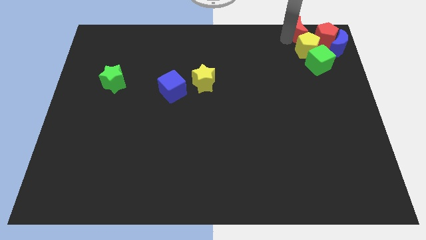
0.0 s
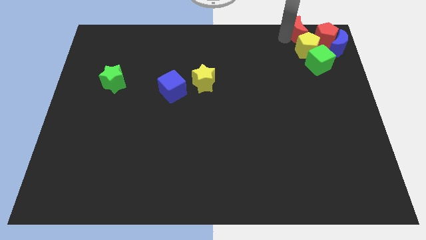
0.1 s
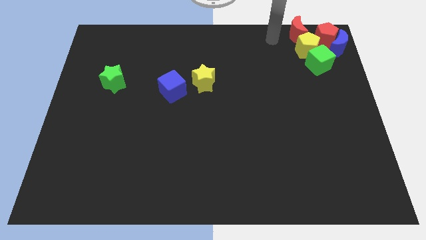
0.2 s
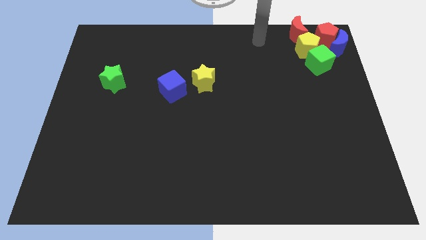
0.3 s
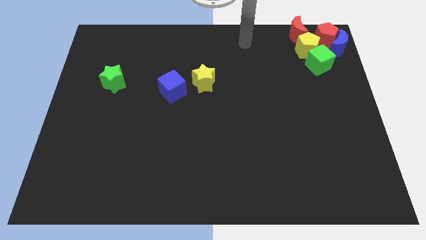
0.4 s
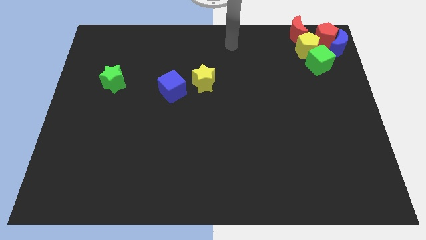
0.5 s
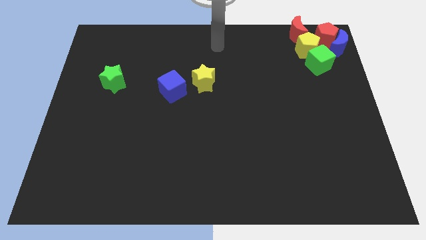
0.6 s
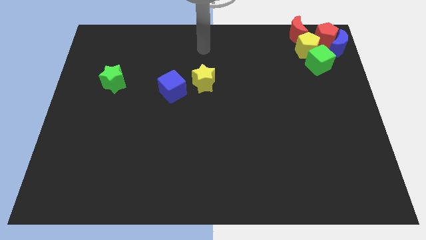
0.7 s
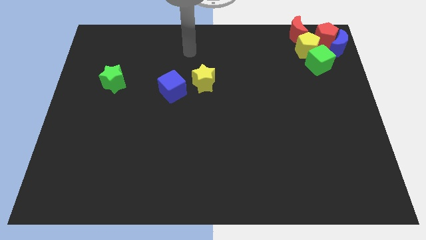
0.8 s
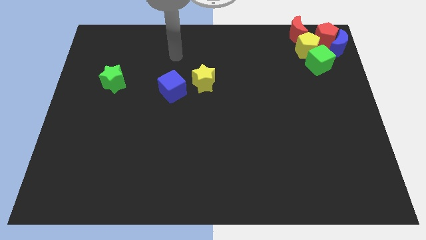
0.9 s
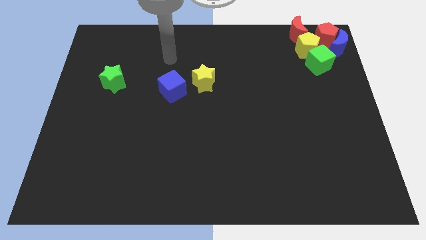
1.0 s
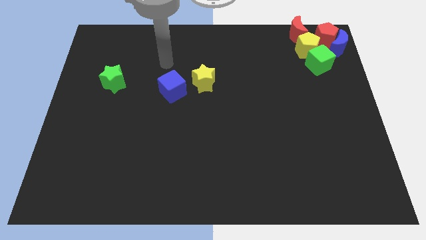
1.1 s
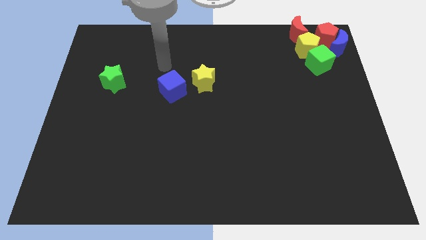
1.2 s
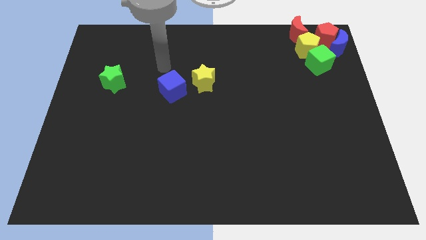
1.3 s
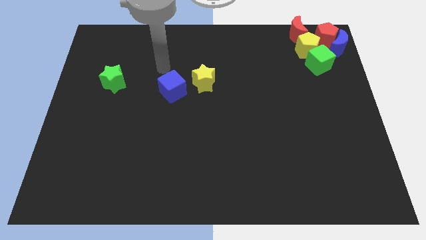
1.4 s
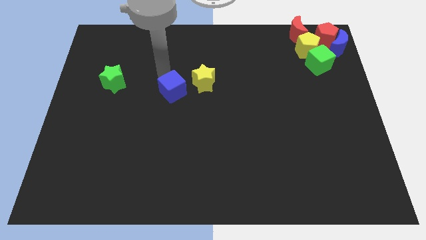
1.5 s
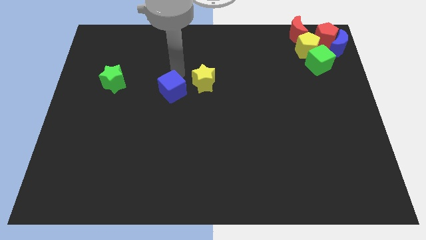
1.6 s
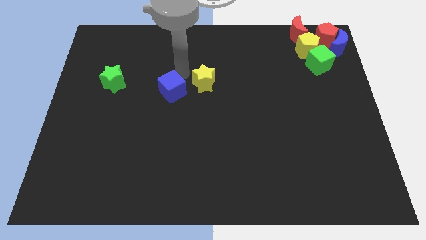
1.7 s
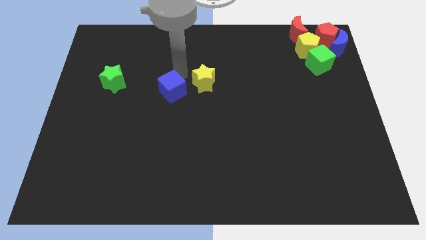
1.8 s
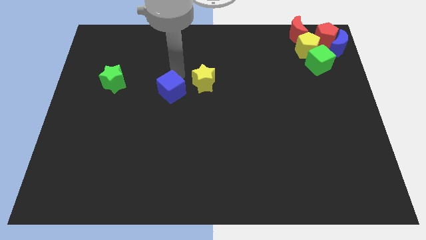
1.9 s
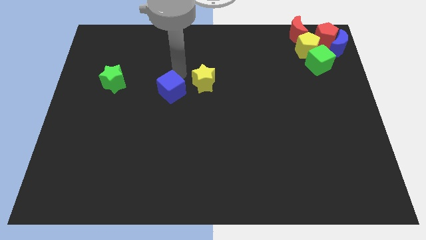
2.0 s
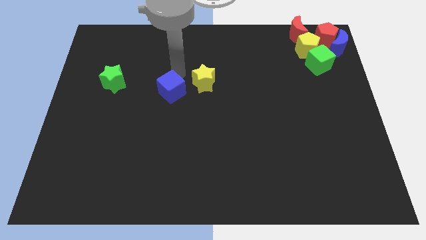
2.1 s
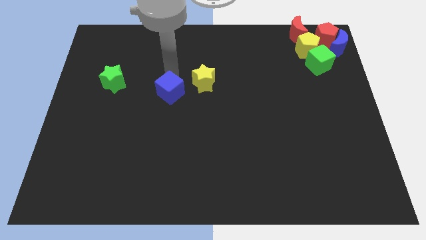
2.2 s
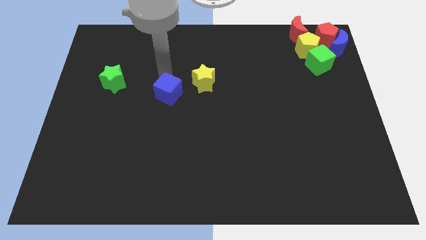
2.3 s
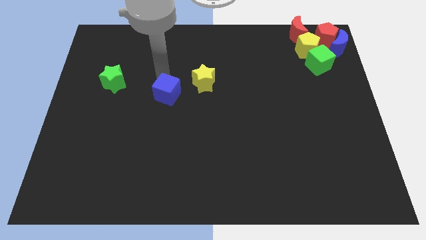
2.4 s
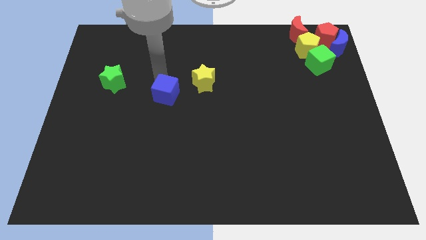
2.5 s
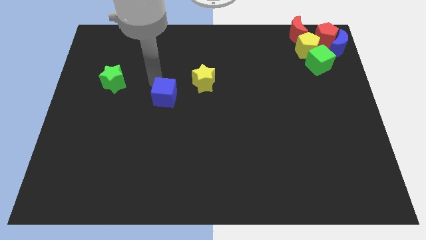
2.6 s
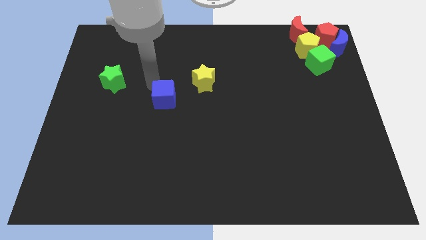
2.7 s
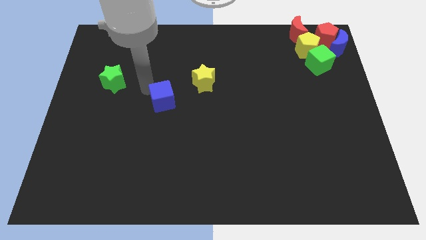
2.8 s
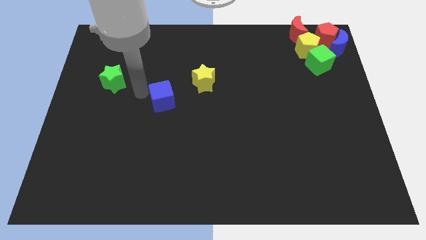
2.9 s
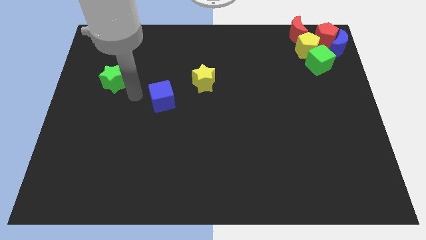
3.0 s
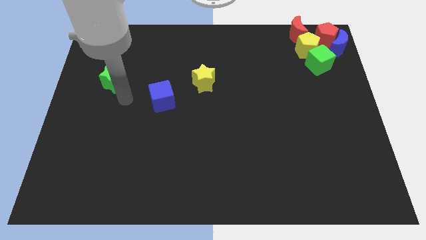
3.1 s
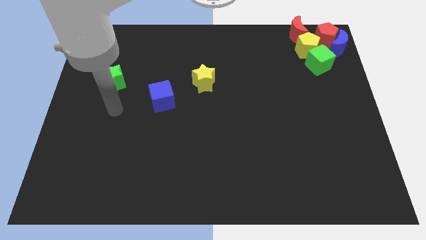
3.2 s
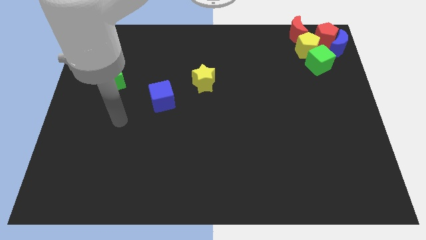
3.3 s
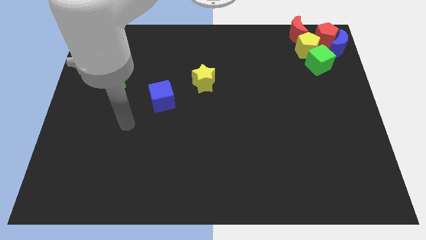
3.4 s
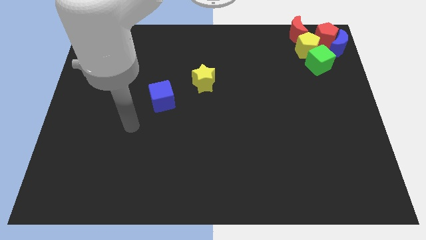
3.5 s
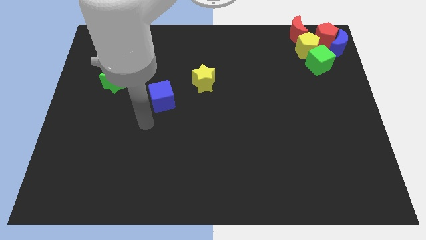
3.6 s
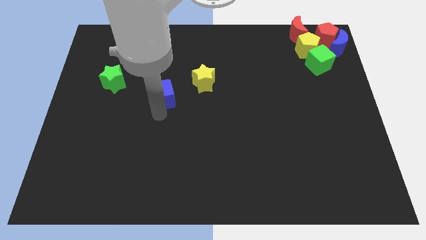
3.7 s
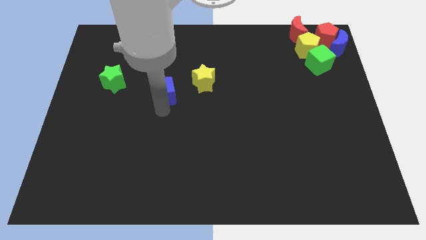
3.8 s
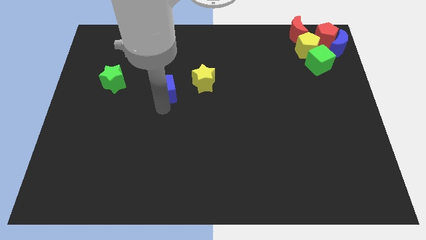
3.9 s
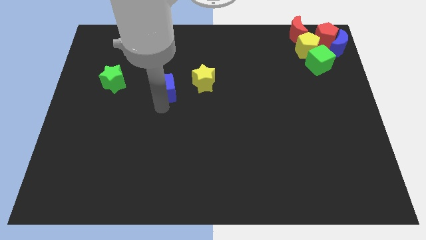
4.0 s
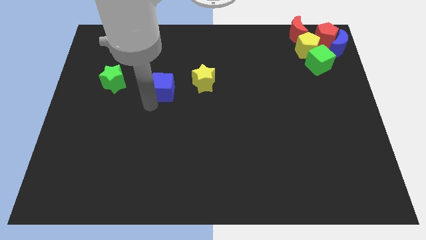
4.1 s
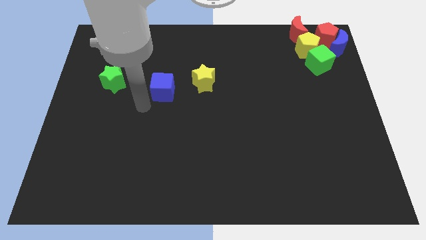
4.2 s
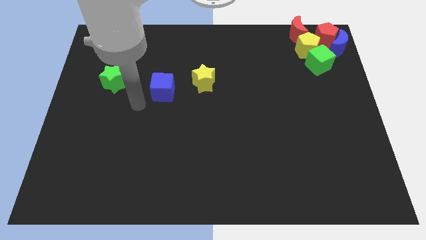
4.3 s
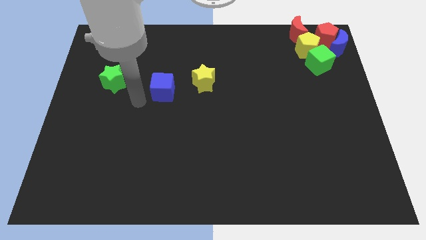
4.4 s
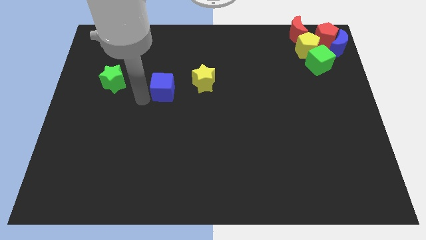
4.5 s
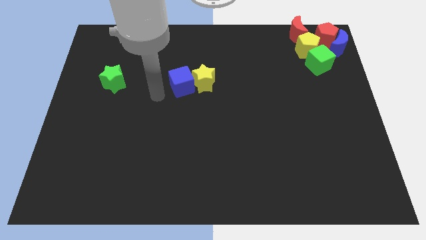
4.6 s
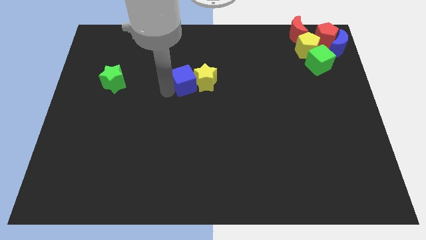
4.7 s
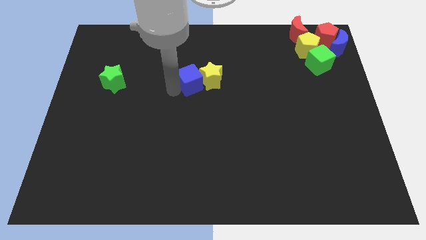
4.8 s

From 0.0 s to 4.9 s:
move the blue crescent left to the yellow pentagon

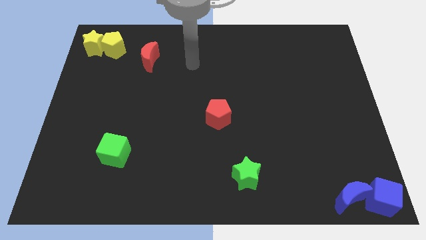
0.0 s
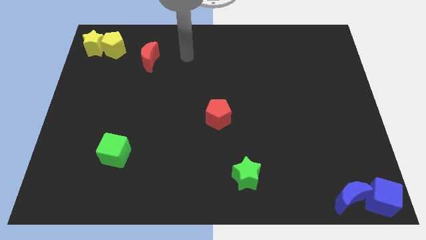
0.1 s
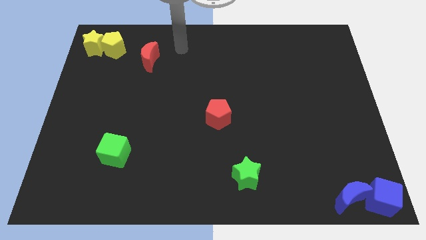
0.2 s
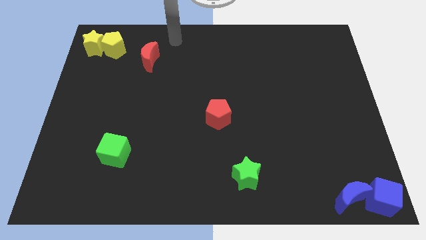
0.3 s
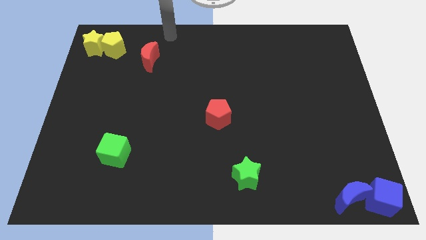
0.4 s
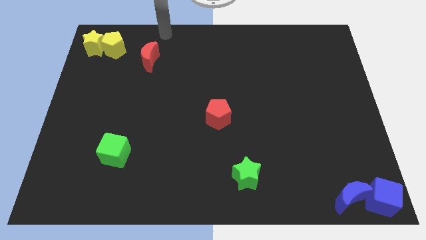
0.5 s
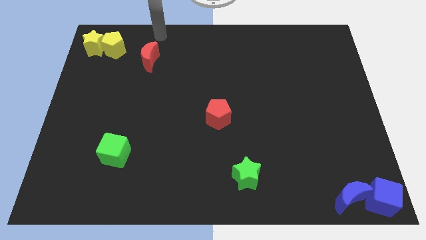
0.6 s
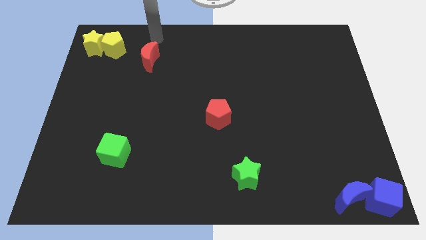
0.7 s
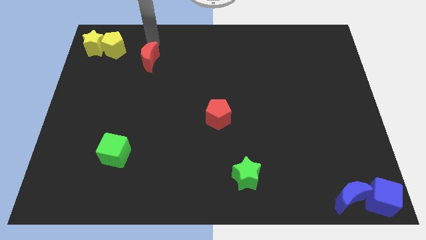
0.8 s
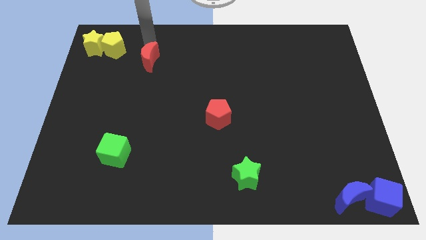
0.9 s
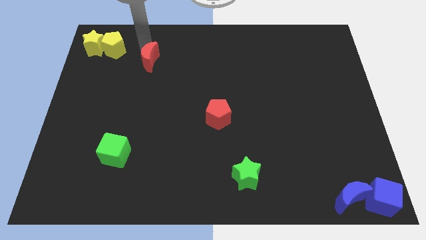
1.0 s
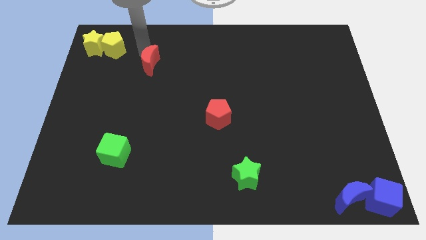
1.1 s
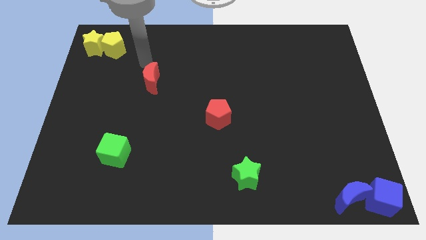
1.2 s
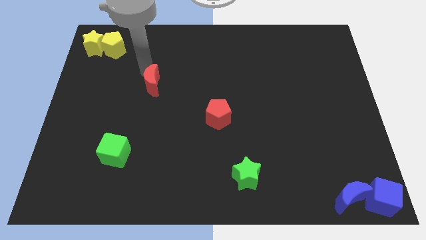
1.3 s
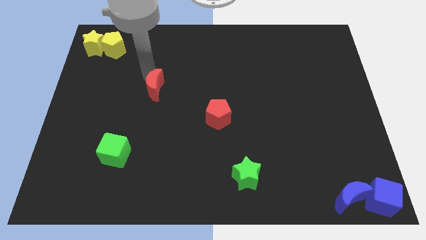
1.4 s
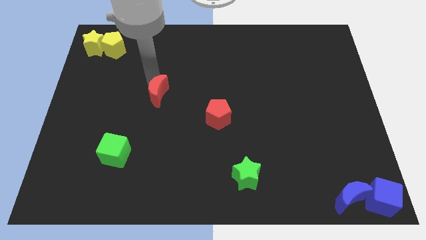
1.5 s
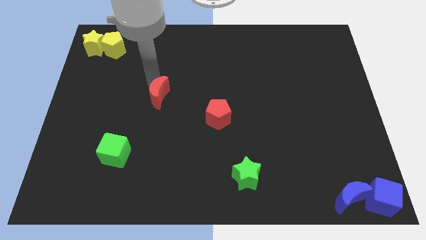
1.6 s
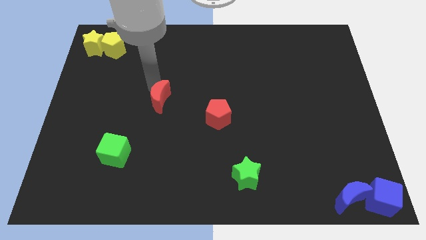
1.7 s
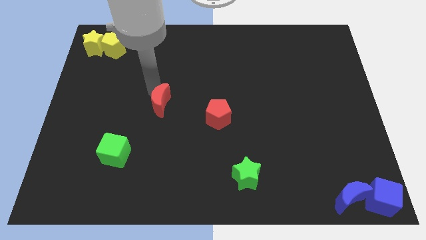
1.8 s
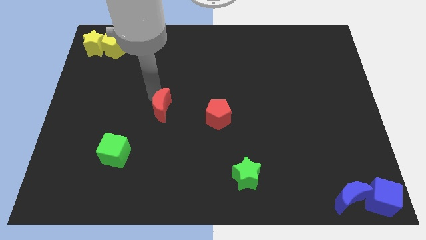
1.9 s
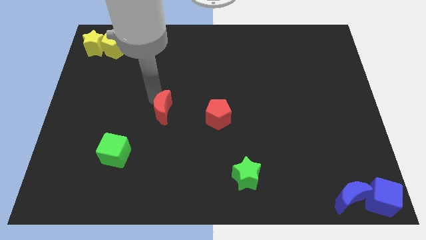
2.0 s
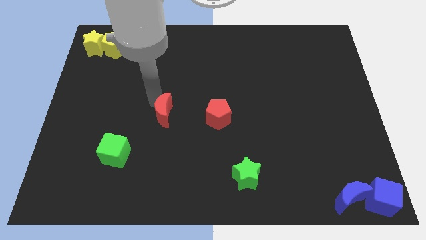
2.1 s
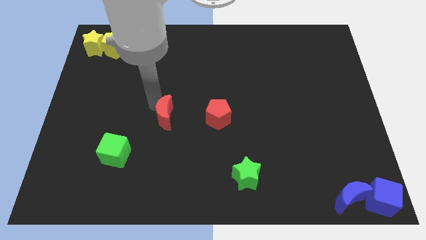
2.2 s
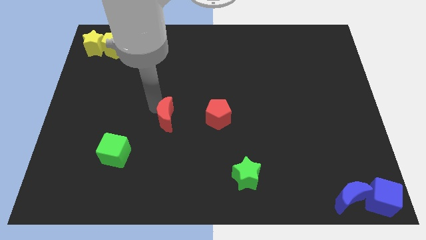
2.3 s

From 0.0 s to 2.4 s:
place red moon parallel to red pentagon

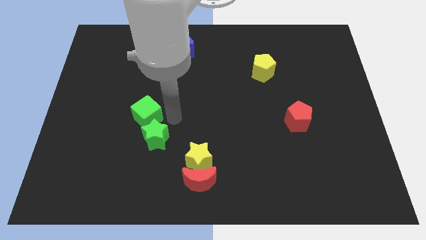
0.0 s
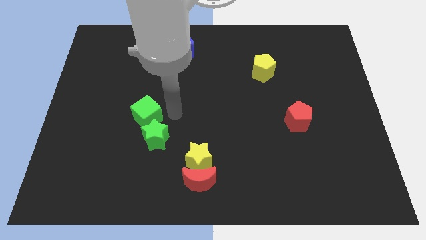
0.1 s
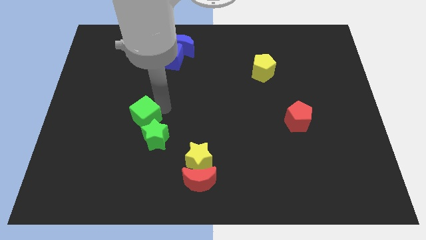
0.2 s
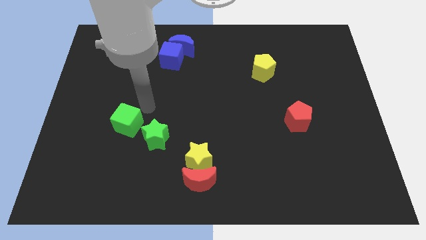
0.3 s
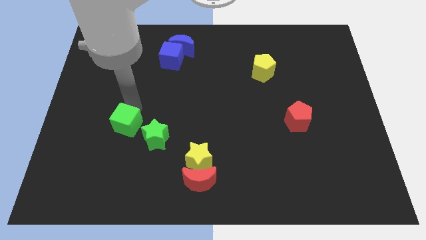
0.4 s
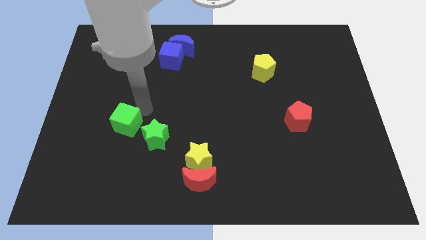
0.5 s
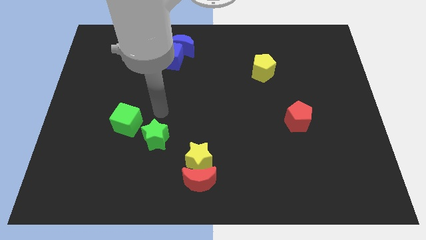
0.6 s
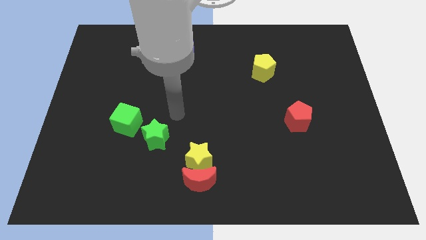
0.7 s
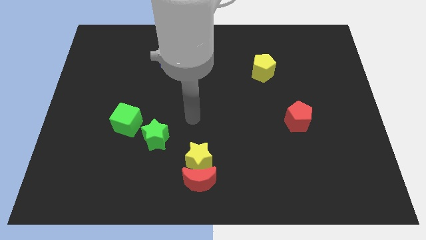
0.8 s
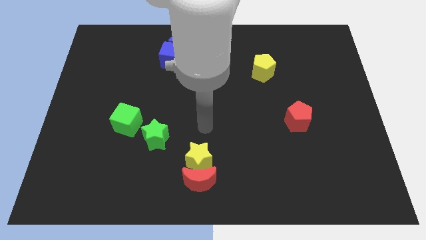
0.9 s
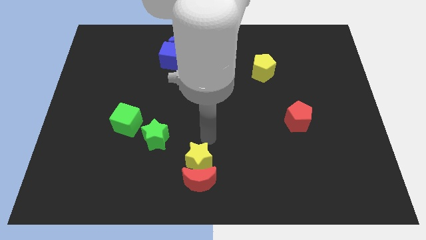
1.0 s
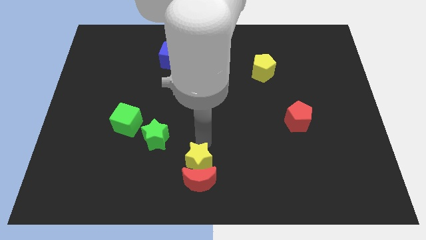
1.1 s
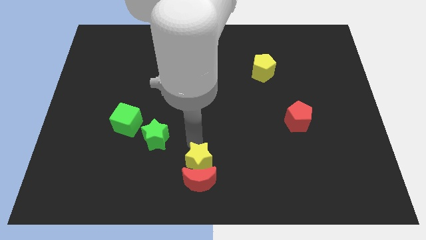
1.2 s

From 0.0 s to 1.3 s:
separate green cube from the green star

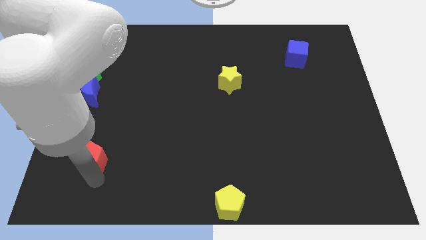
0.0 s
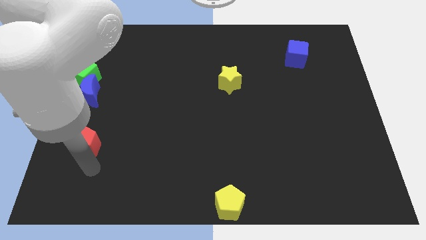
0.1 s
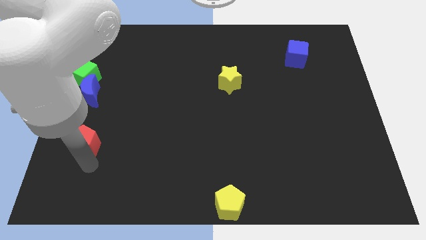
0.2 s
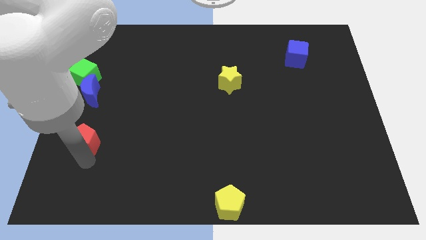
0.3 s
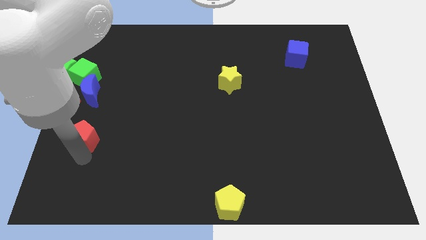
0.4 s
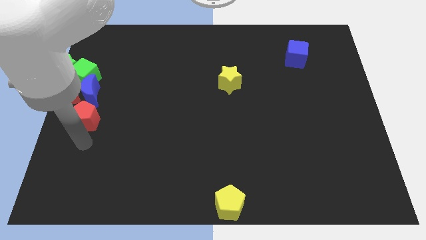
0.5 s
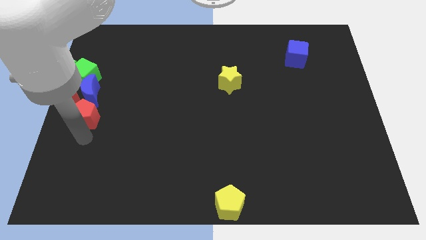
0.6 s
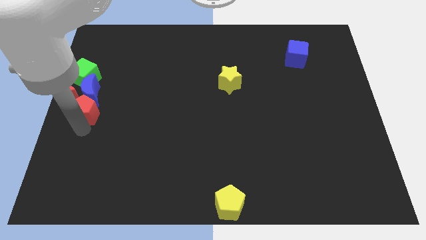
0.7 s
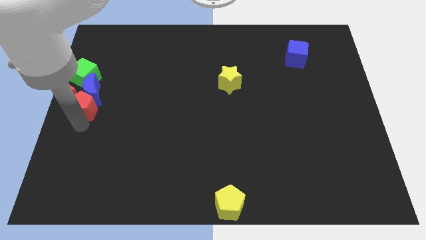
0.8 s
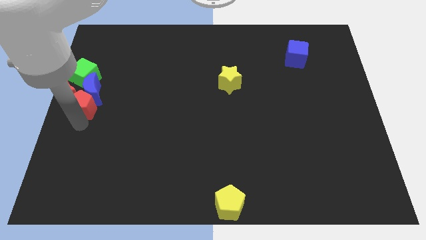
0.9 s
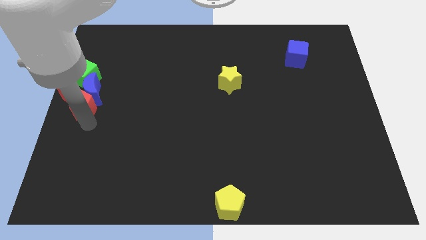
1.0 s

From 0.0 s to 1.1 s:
push the red pentagon into group of blocks
